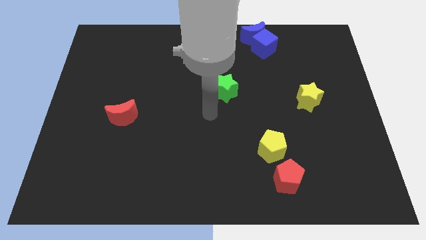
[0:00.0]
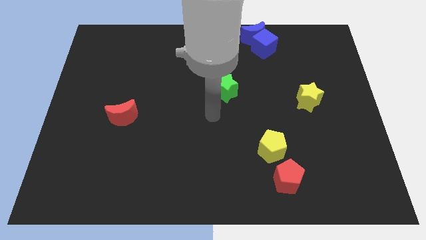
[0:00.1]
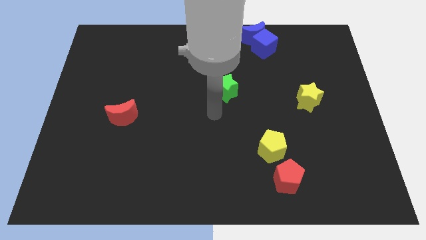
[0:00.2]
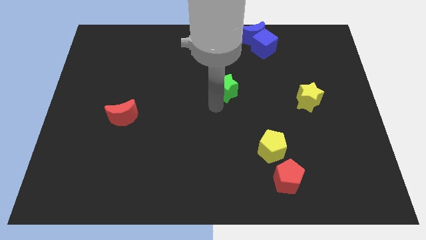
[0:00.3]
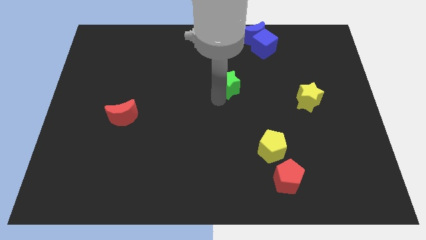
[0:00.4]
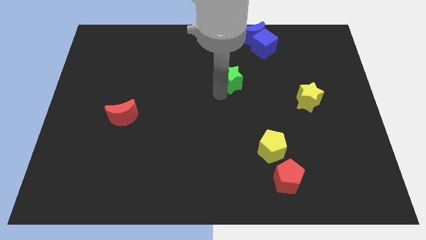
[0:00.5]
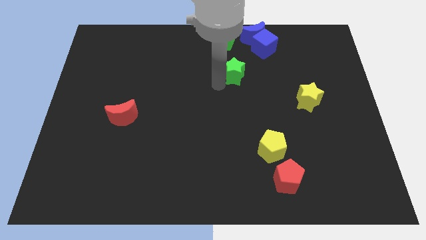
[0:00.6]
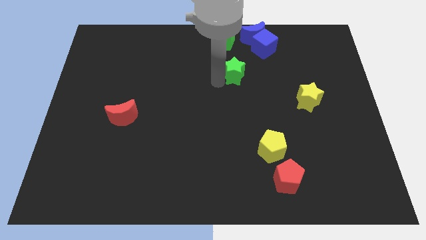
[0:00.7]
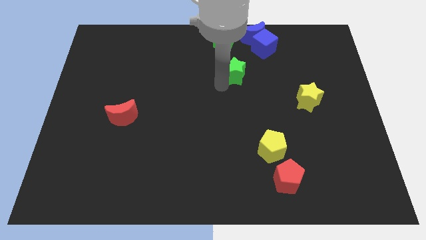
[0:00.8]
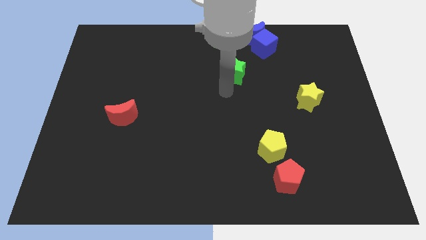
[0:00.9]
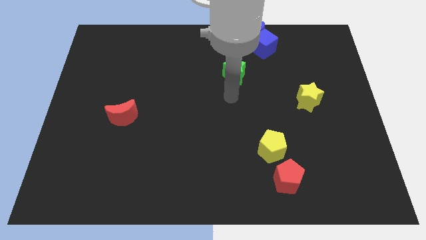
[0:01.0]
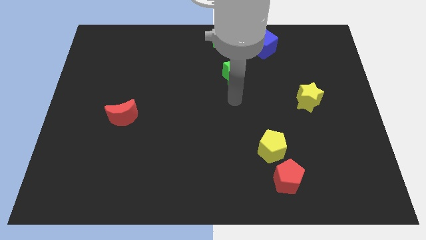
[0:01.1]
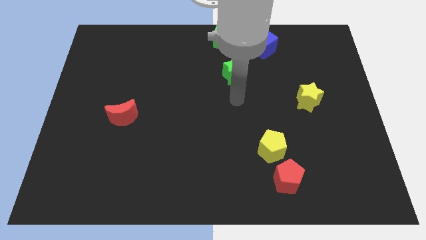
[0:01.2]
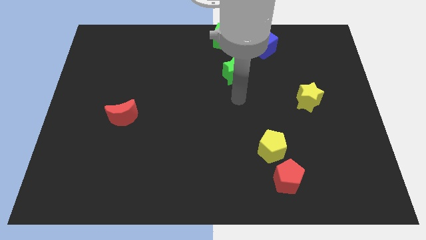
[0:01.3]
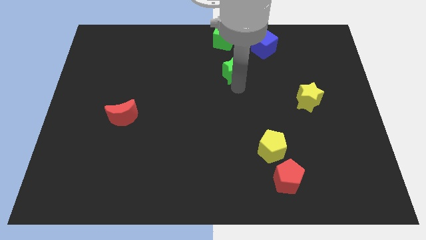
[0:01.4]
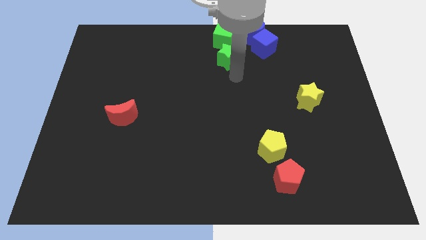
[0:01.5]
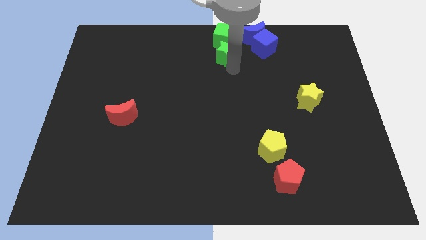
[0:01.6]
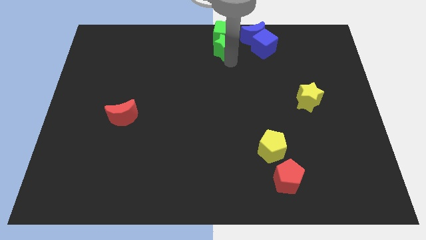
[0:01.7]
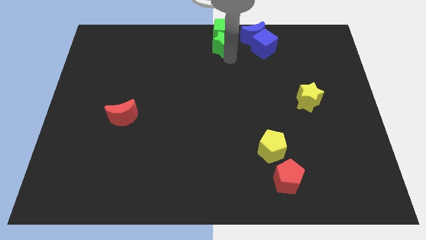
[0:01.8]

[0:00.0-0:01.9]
push the green star into the green cube

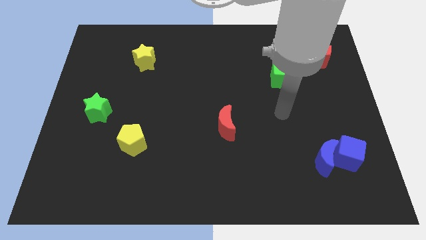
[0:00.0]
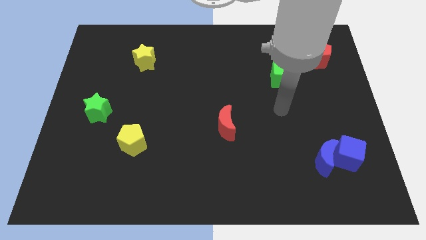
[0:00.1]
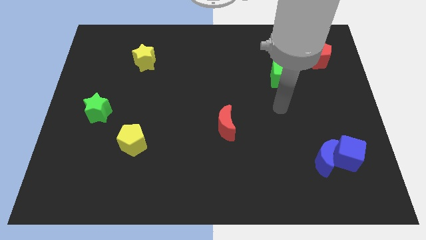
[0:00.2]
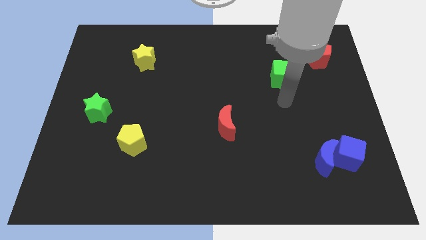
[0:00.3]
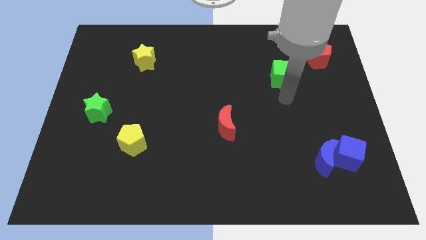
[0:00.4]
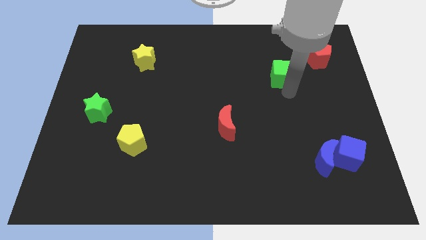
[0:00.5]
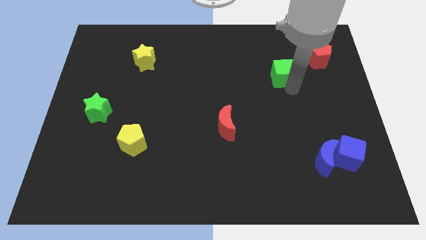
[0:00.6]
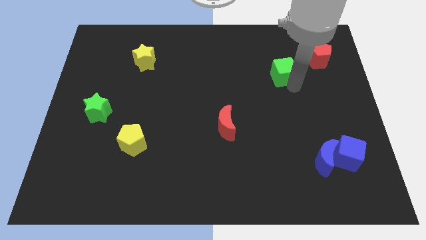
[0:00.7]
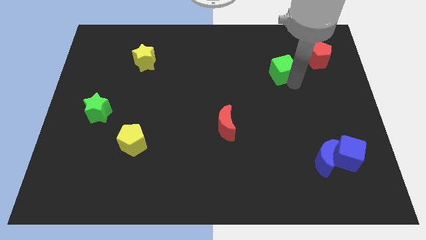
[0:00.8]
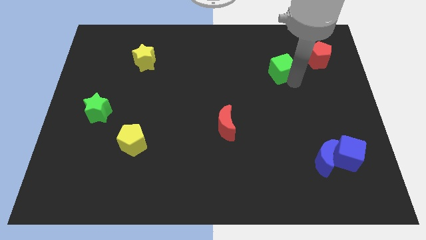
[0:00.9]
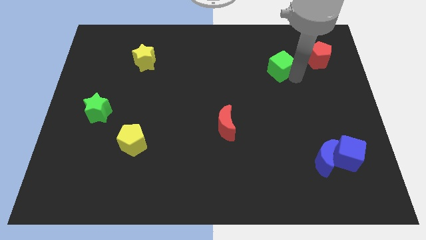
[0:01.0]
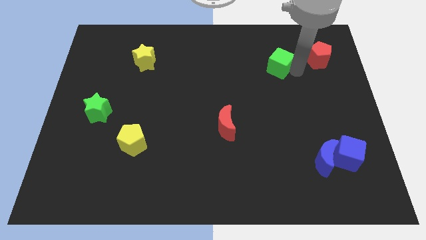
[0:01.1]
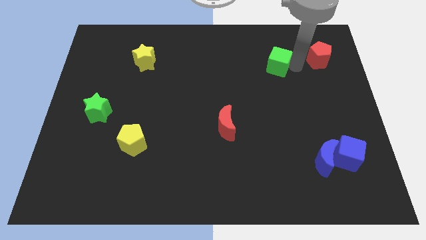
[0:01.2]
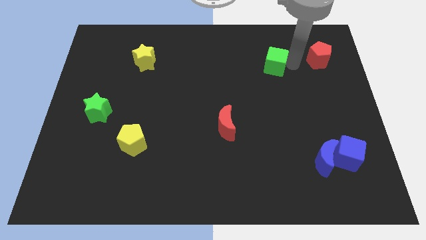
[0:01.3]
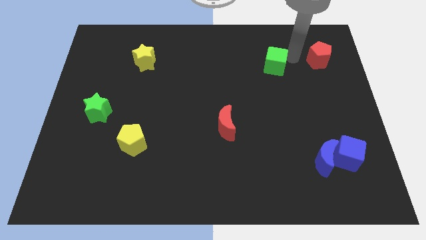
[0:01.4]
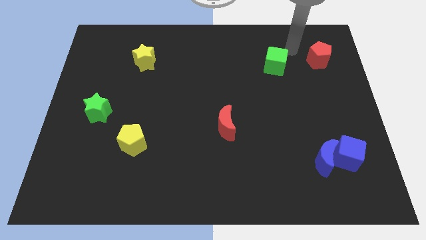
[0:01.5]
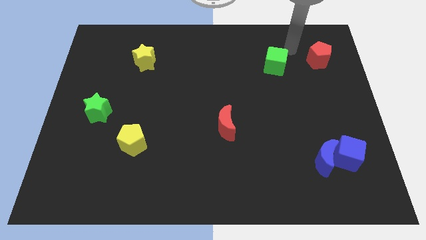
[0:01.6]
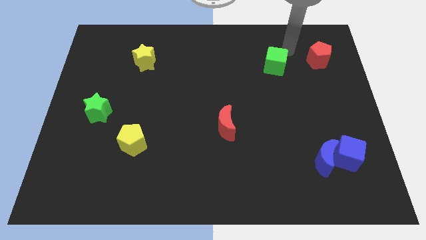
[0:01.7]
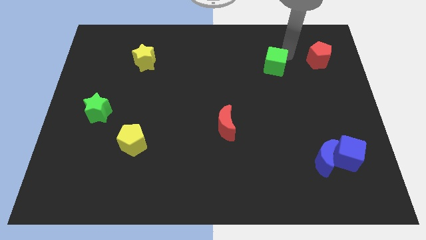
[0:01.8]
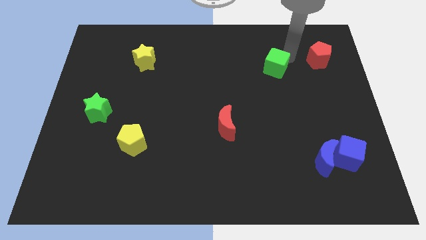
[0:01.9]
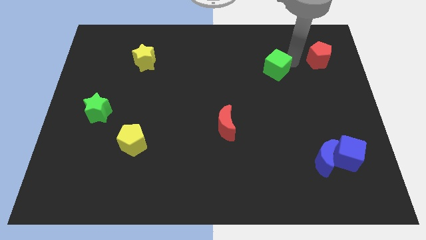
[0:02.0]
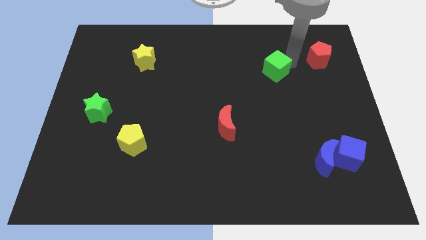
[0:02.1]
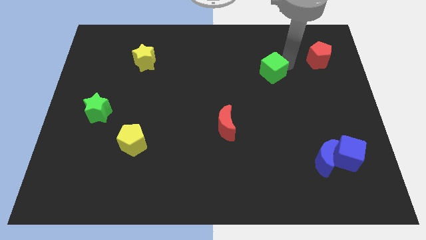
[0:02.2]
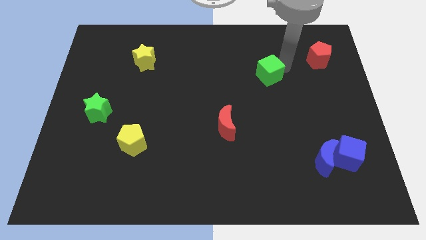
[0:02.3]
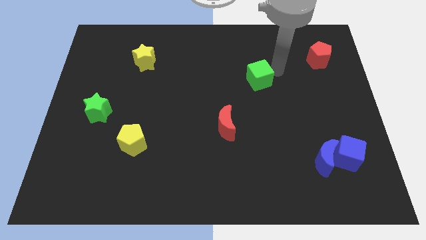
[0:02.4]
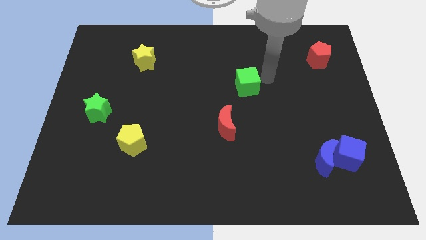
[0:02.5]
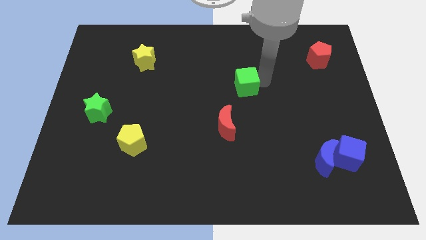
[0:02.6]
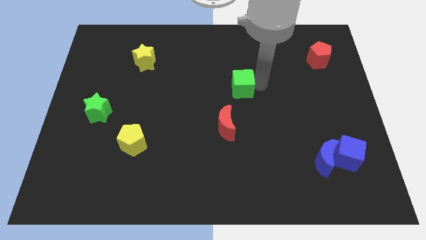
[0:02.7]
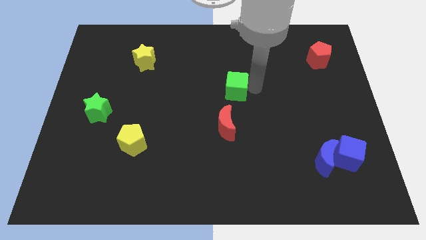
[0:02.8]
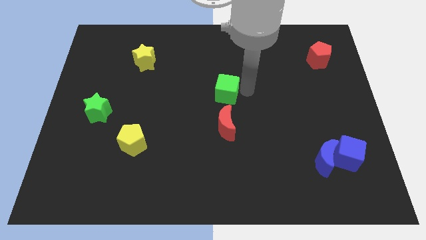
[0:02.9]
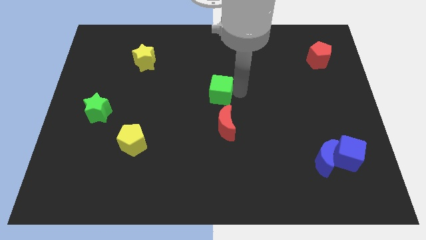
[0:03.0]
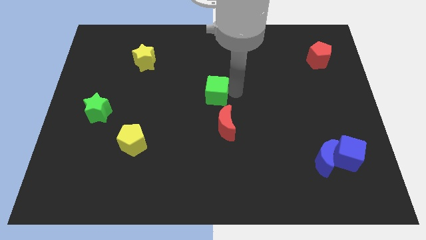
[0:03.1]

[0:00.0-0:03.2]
place the green cube above the red moon

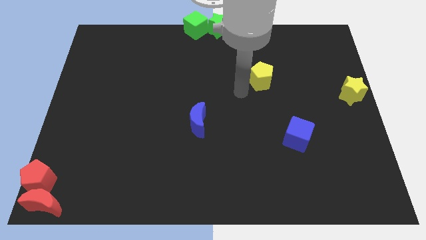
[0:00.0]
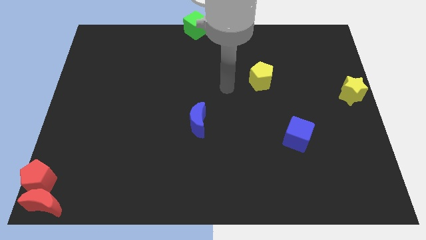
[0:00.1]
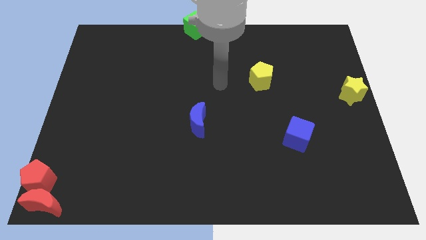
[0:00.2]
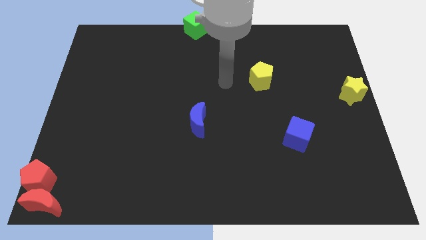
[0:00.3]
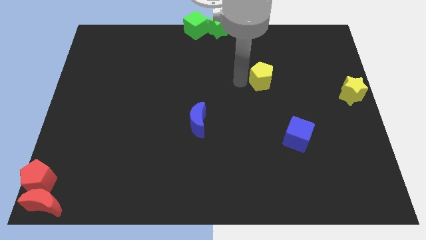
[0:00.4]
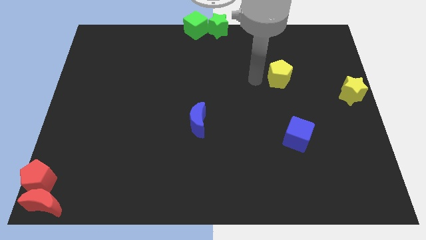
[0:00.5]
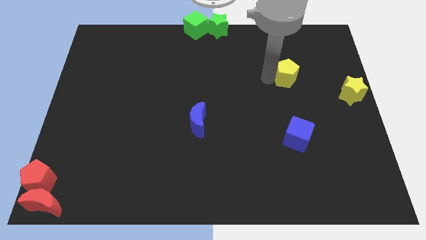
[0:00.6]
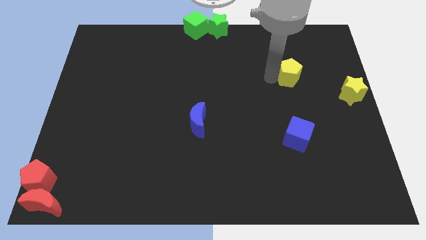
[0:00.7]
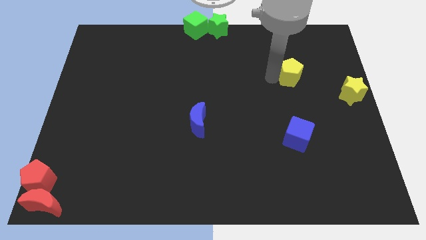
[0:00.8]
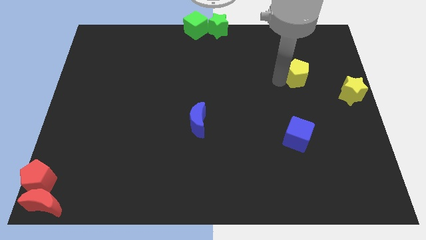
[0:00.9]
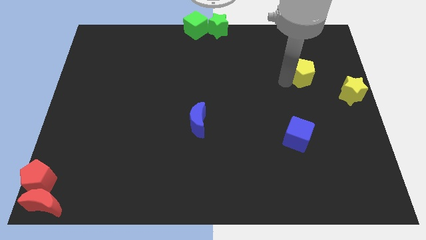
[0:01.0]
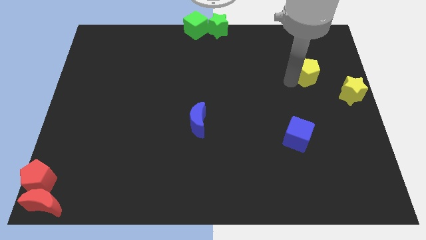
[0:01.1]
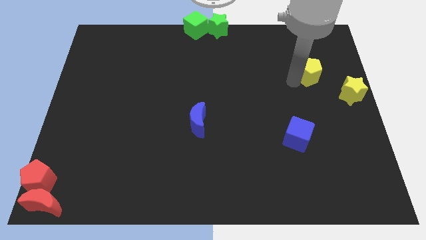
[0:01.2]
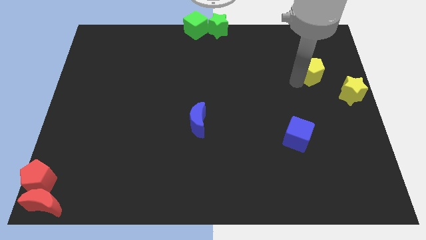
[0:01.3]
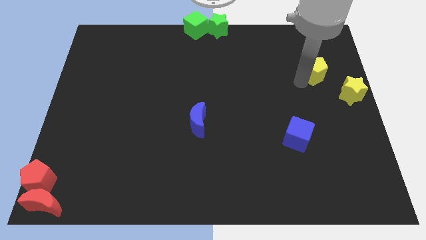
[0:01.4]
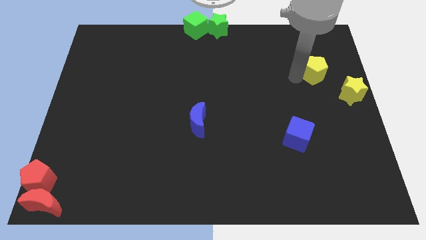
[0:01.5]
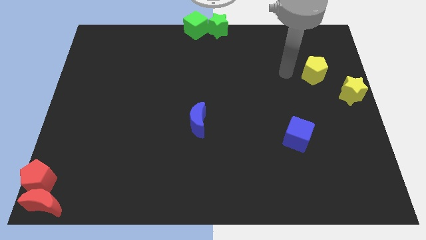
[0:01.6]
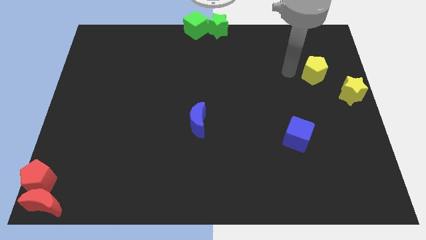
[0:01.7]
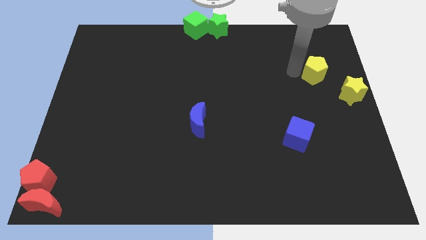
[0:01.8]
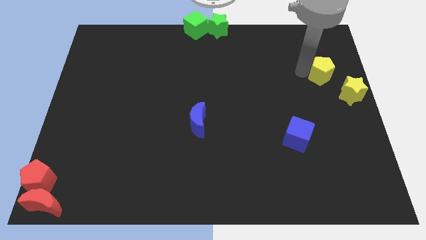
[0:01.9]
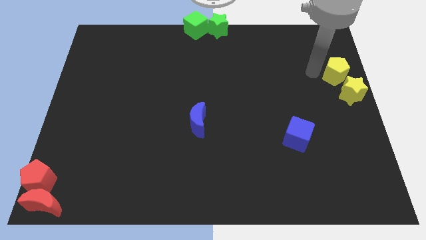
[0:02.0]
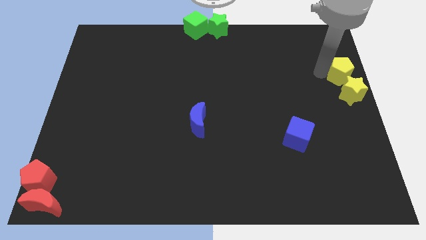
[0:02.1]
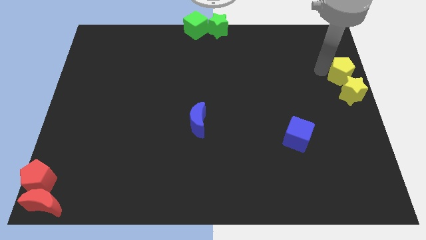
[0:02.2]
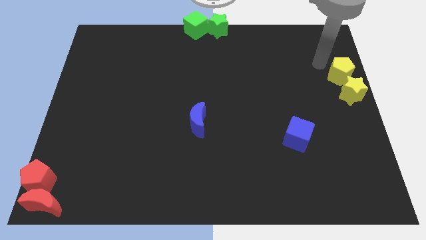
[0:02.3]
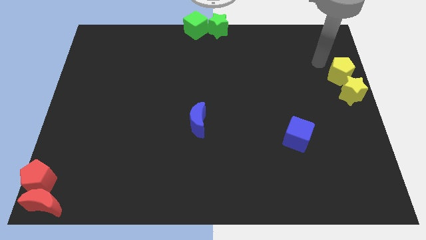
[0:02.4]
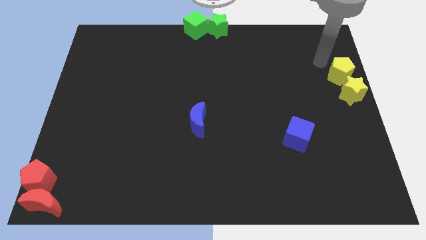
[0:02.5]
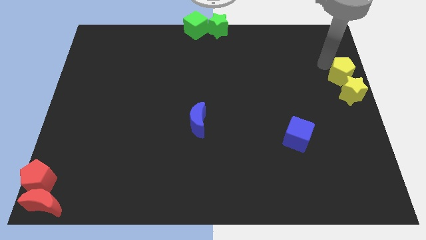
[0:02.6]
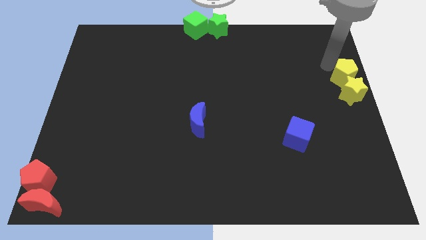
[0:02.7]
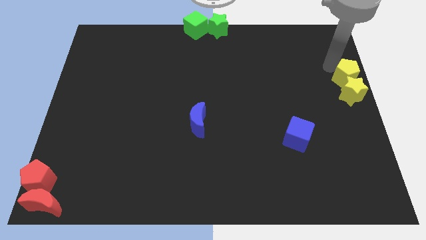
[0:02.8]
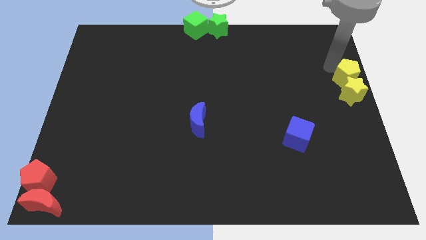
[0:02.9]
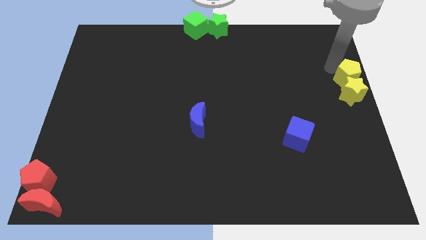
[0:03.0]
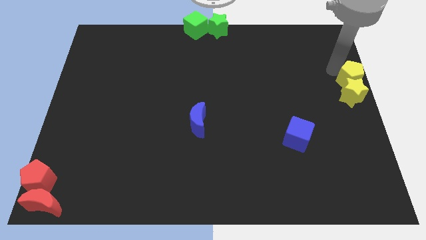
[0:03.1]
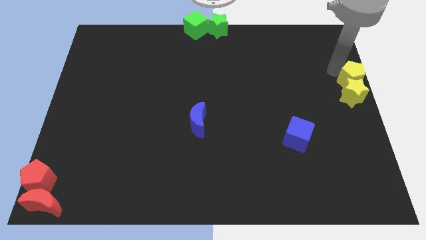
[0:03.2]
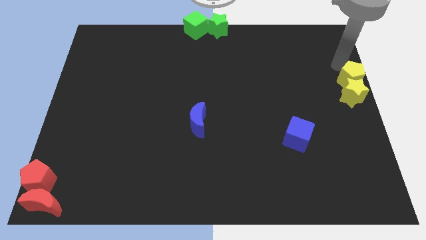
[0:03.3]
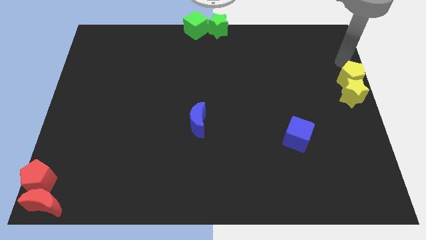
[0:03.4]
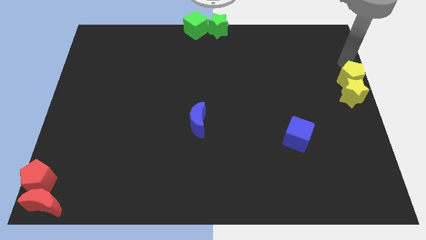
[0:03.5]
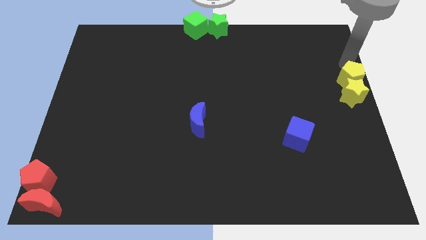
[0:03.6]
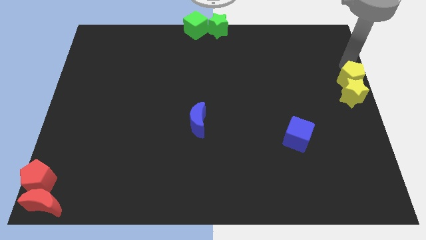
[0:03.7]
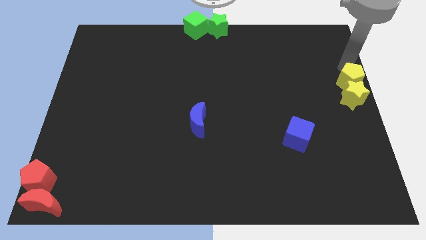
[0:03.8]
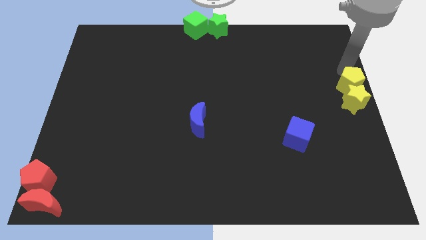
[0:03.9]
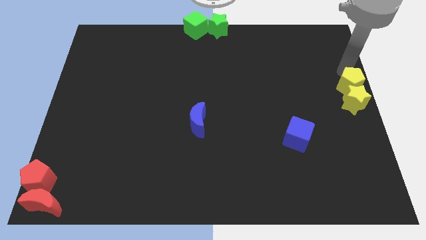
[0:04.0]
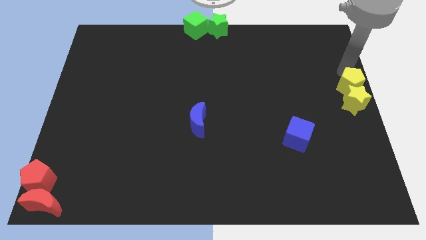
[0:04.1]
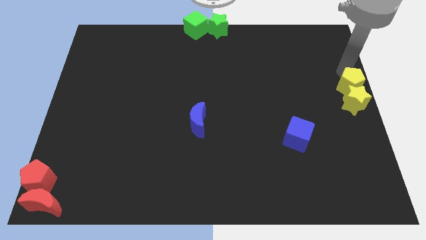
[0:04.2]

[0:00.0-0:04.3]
place the yellow pentagon vertically above the yellow star
